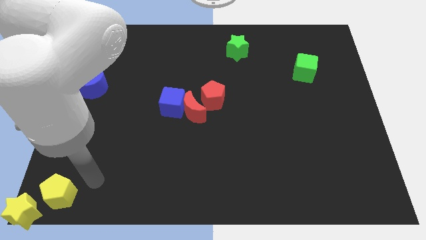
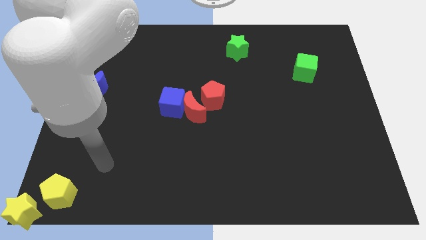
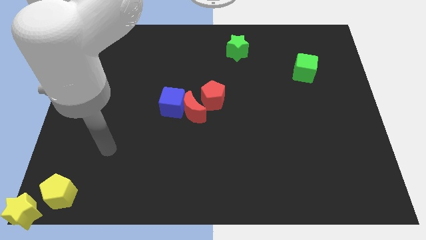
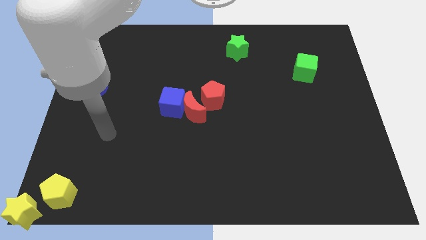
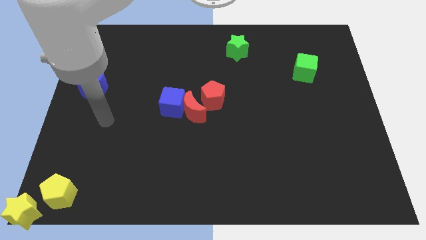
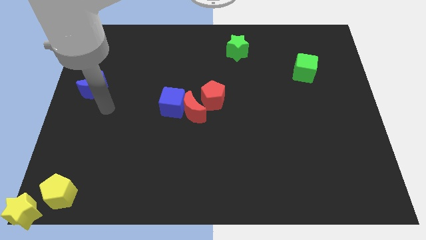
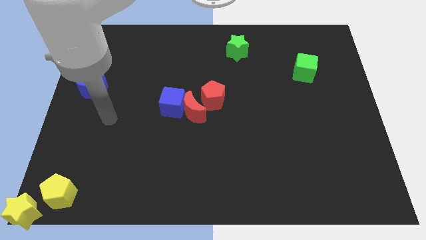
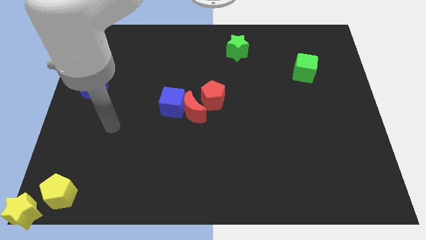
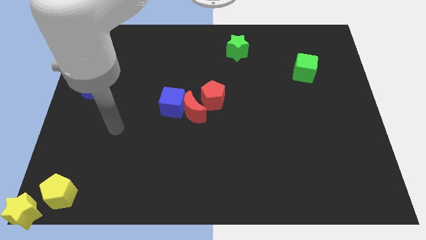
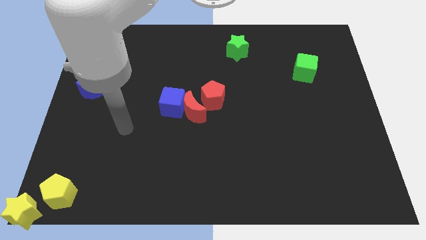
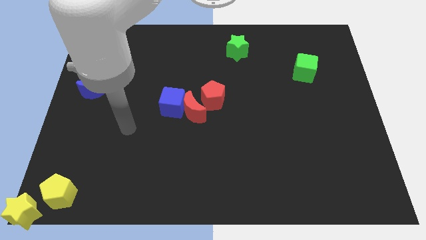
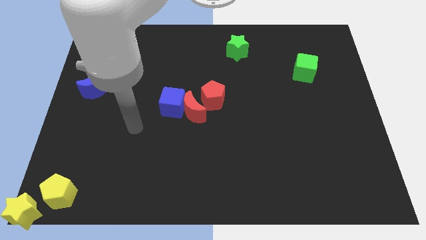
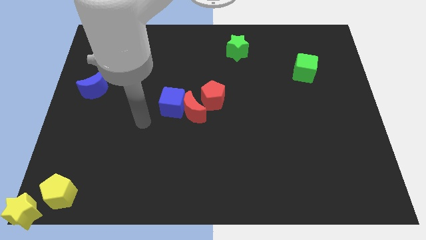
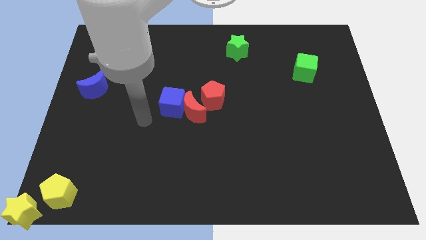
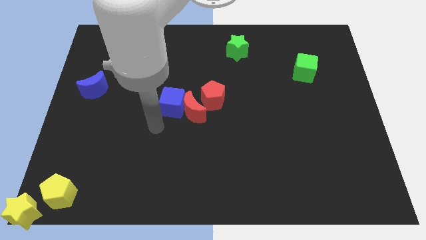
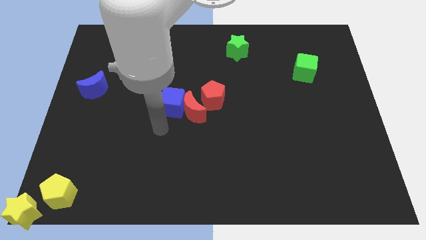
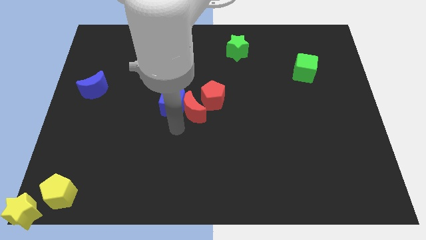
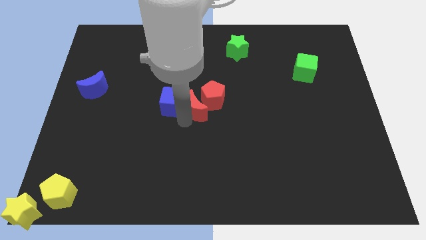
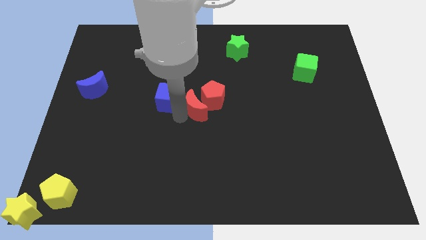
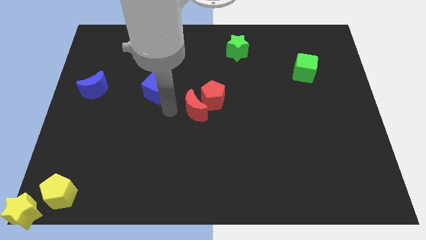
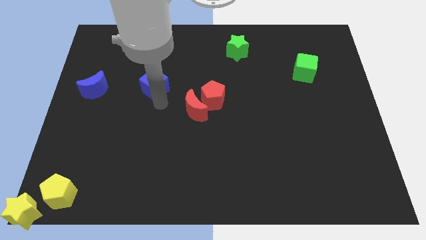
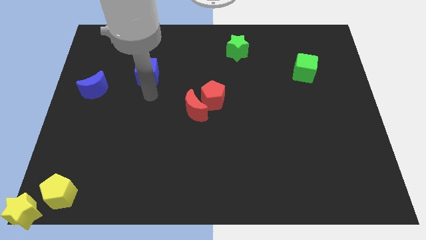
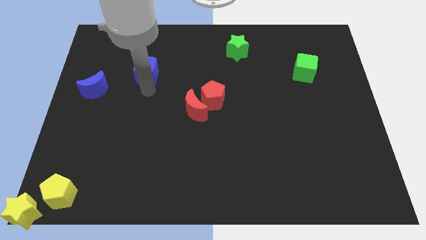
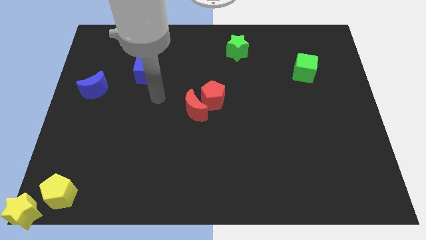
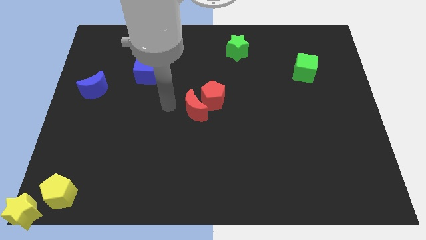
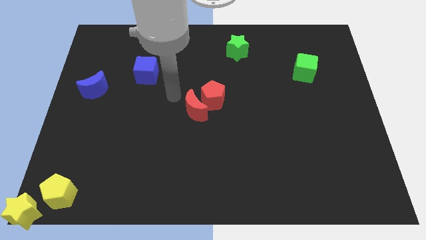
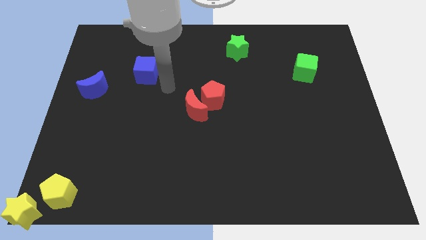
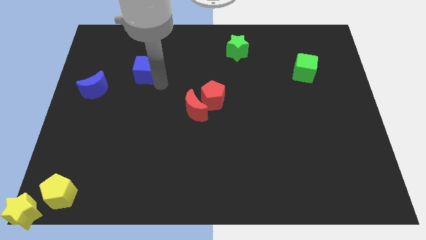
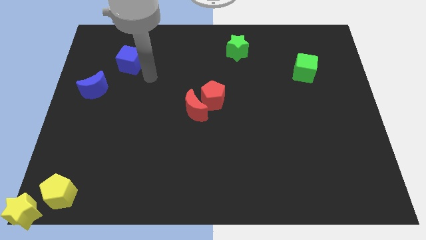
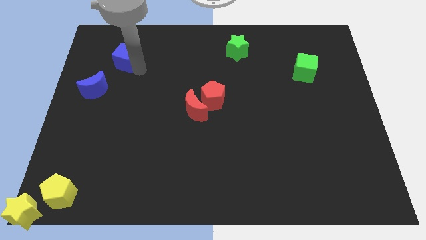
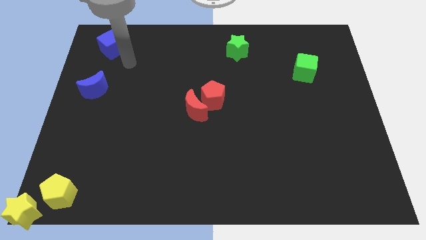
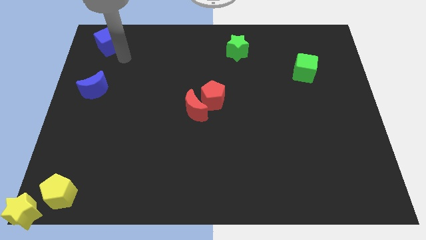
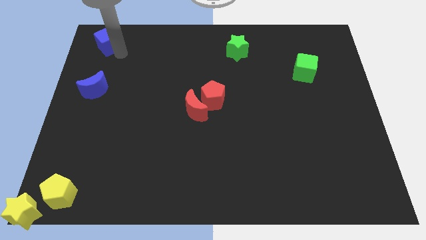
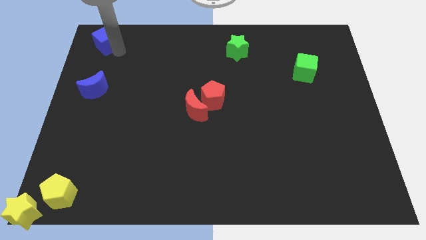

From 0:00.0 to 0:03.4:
place the blue cube vertically above the blue crescent

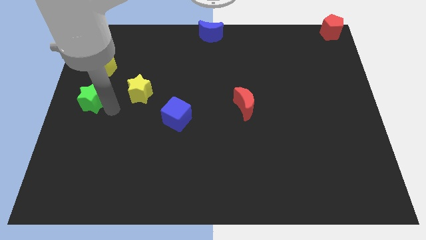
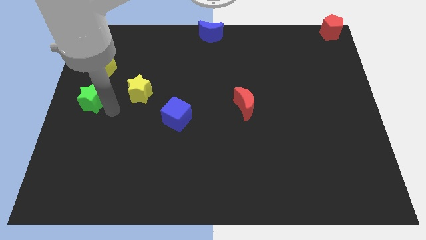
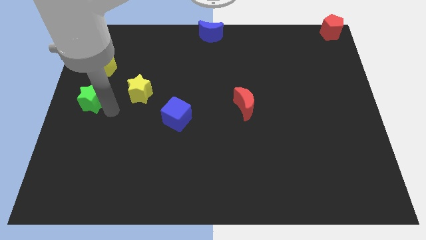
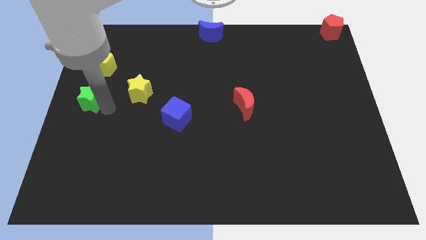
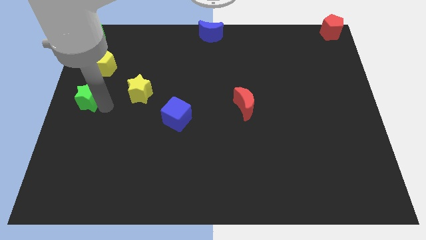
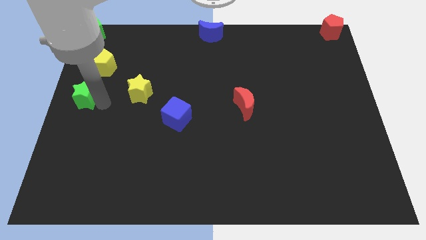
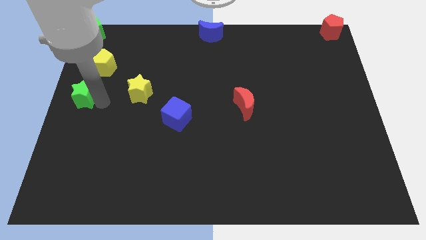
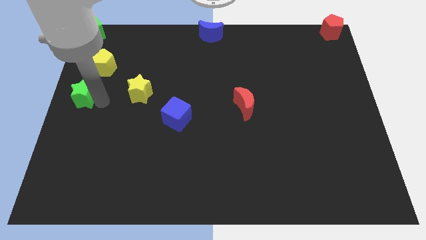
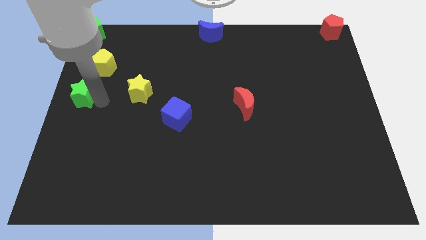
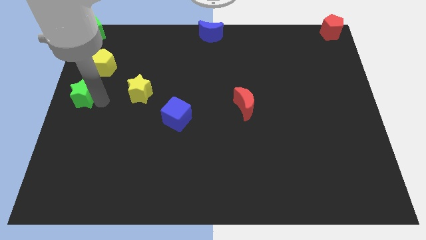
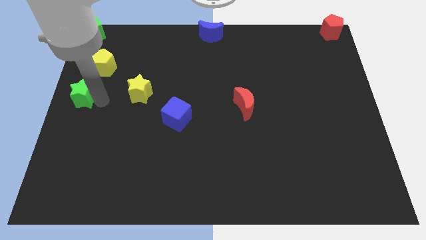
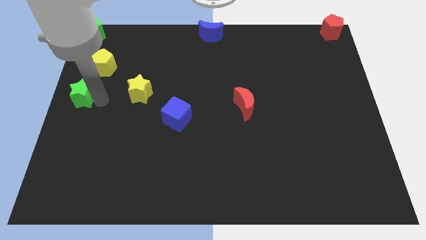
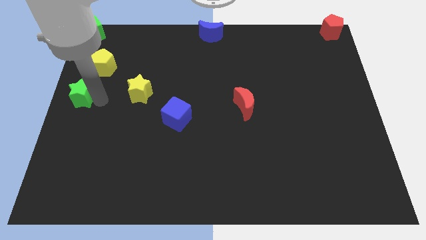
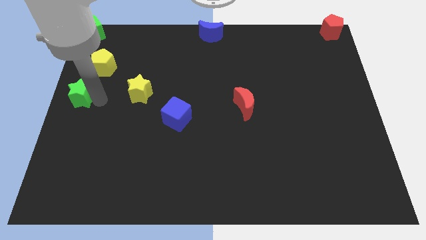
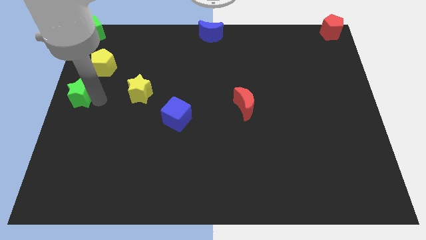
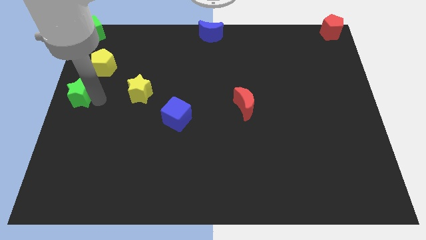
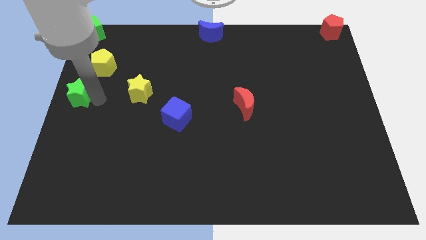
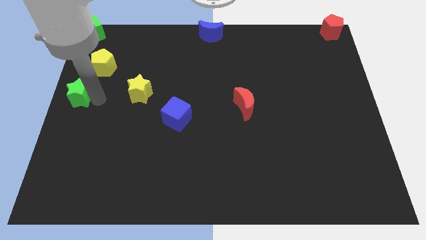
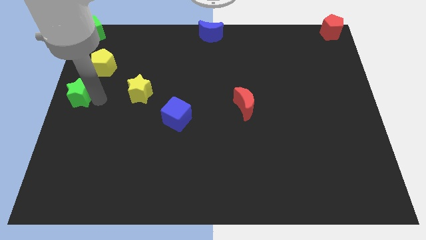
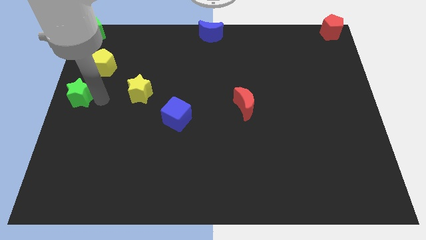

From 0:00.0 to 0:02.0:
slide the green star diagonally to the bottom left of the yellow pentagon

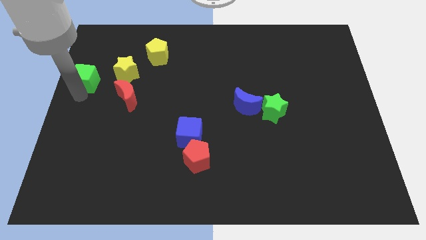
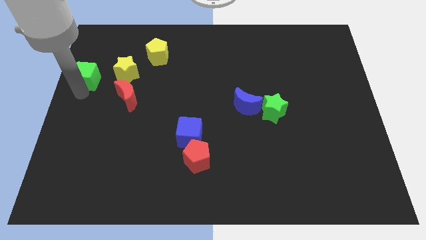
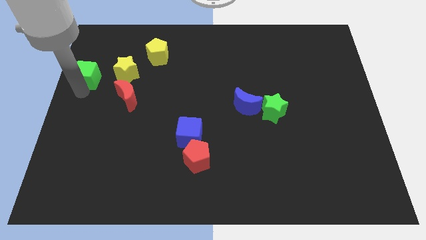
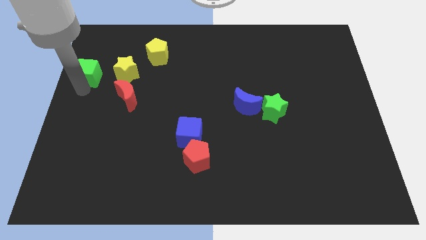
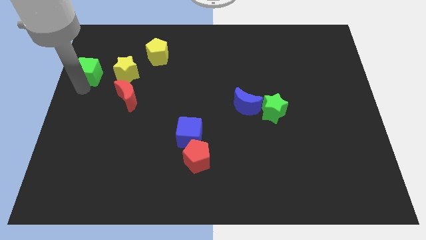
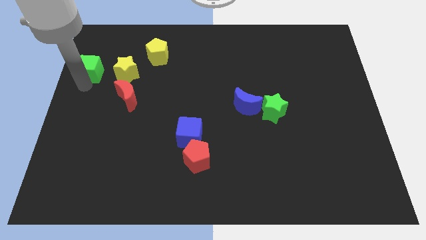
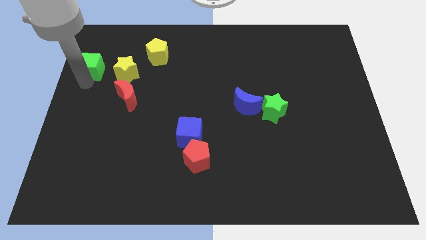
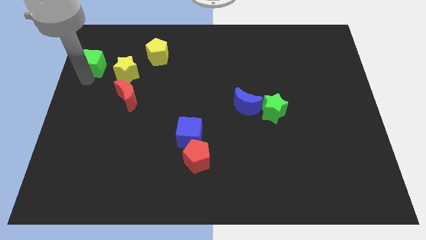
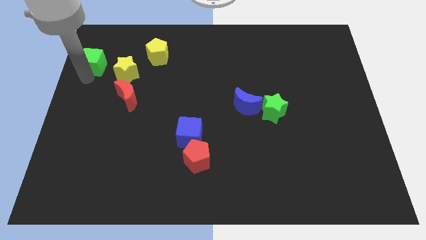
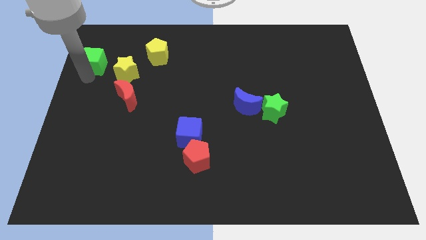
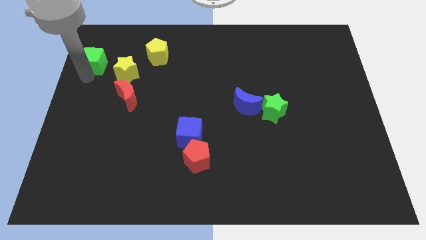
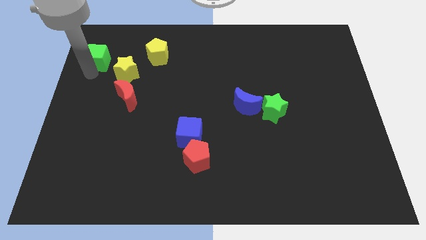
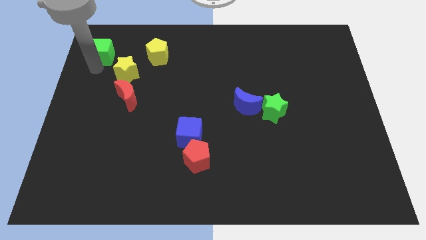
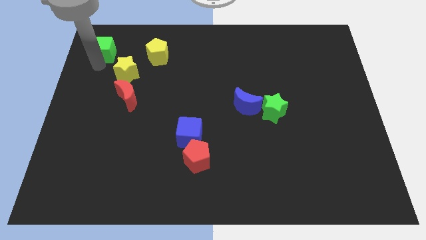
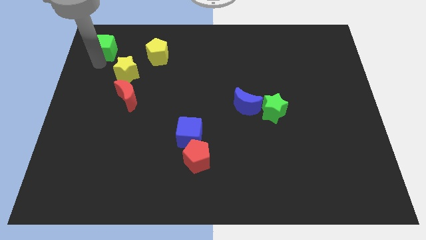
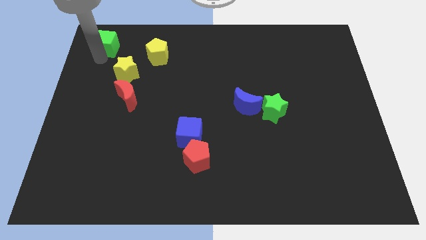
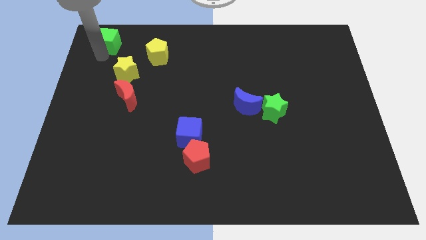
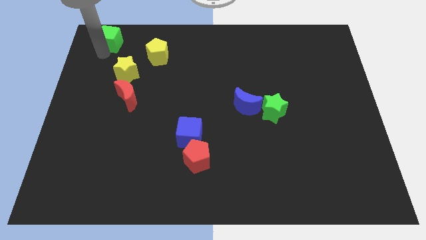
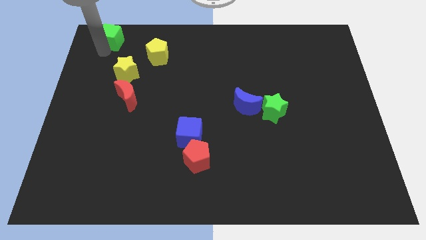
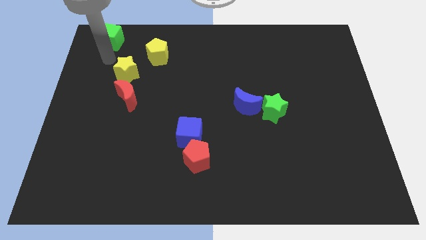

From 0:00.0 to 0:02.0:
slide the green cube to the top side

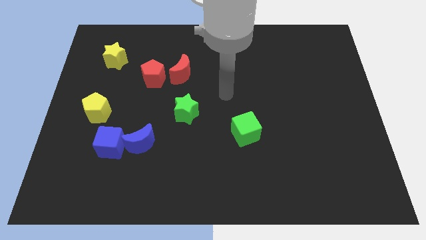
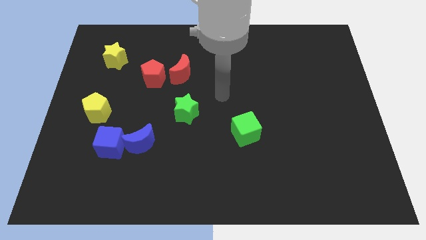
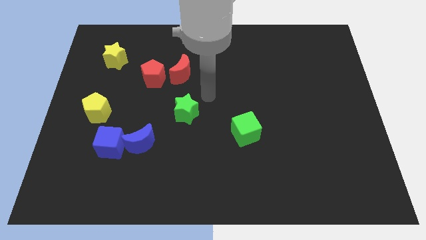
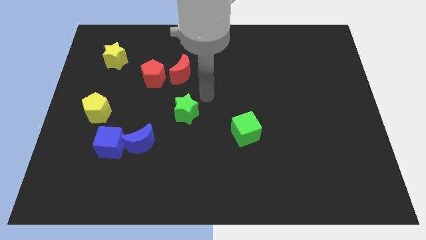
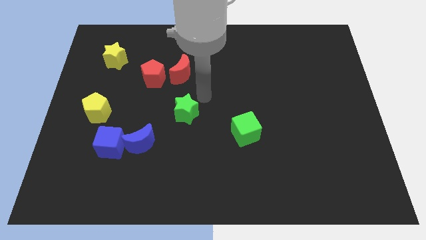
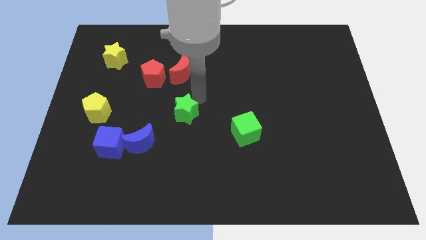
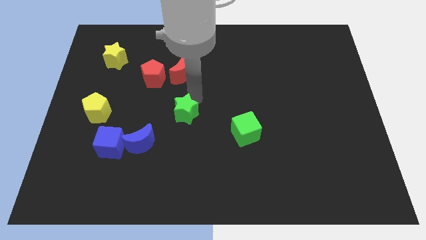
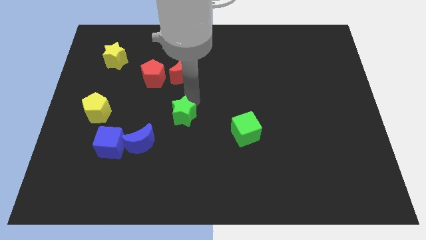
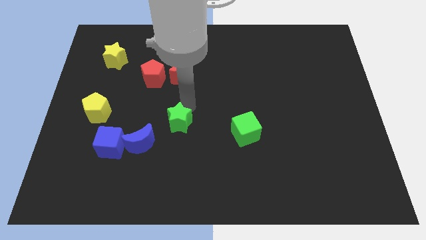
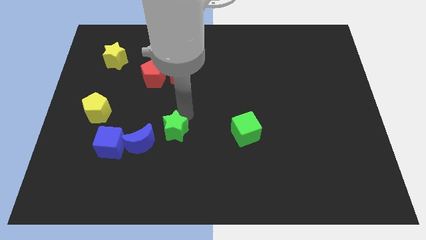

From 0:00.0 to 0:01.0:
touch the green star

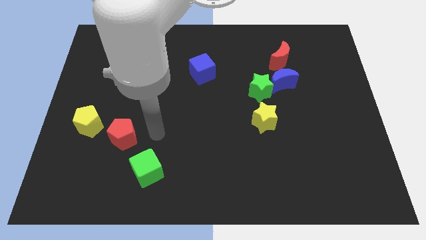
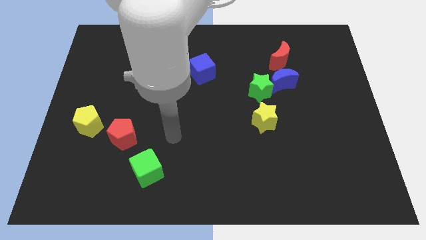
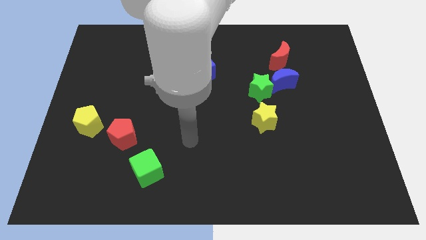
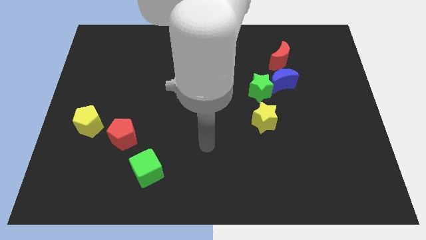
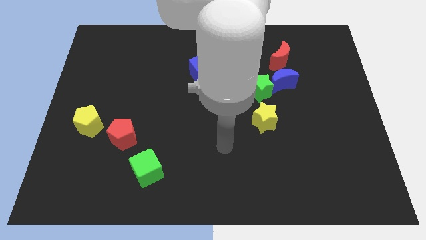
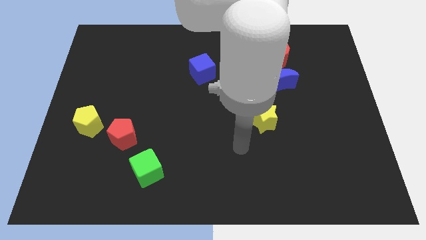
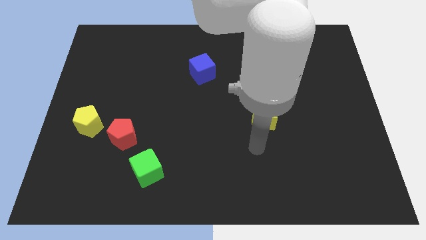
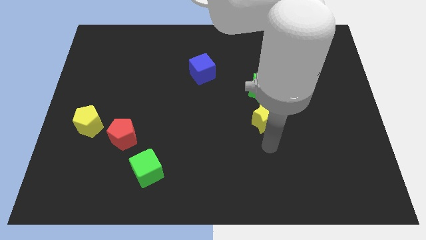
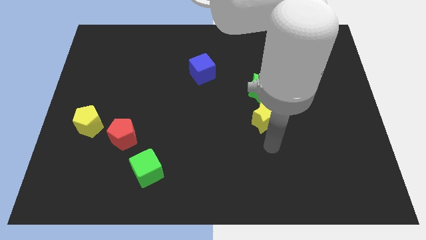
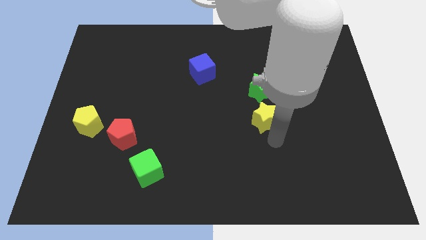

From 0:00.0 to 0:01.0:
drag your arm to the yellow star
